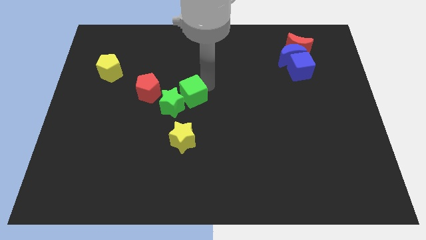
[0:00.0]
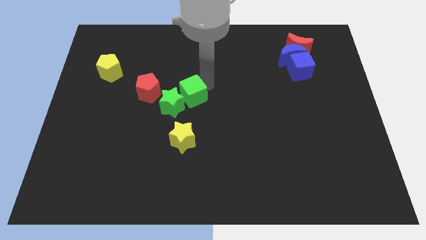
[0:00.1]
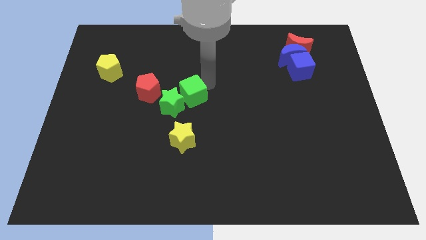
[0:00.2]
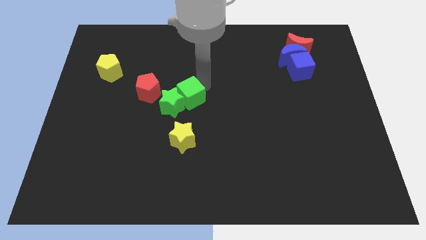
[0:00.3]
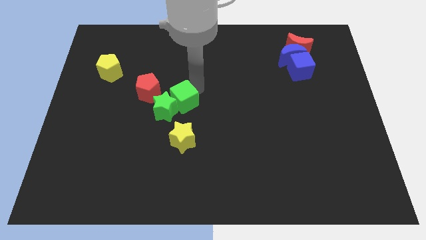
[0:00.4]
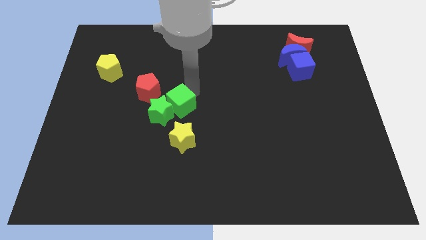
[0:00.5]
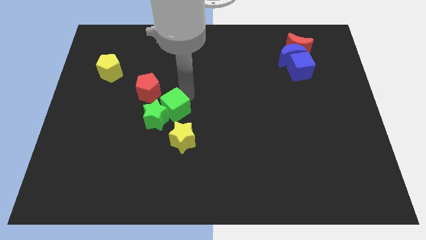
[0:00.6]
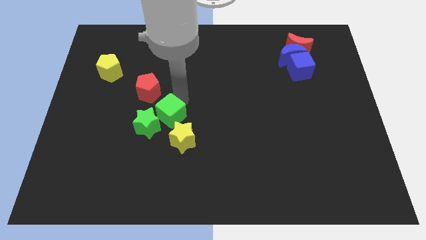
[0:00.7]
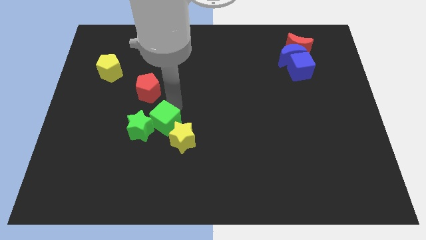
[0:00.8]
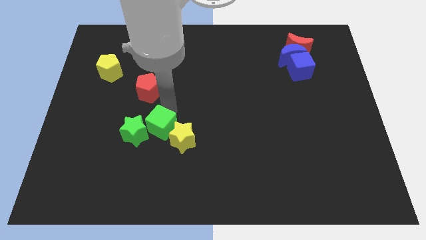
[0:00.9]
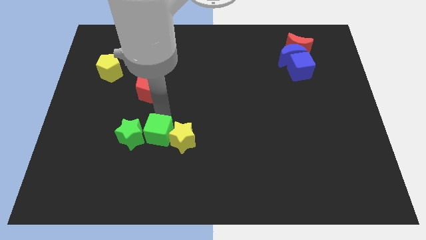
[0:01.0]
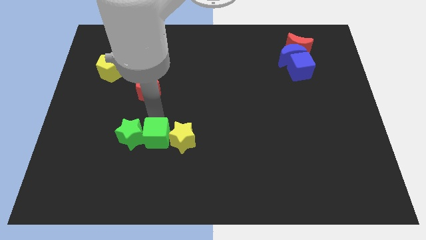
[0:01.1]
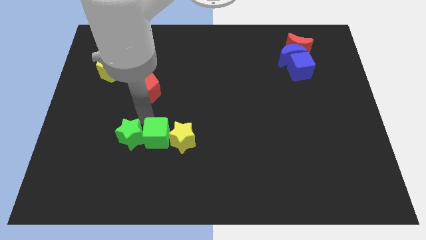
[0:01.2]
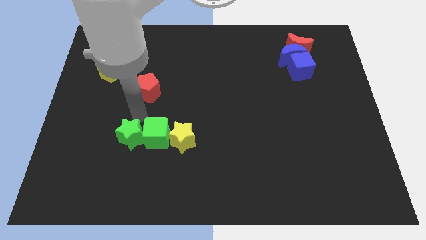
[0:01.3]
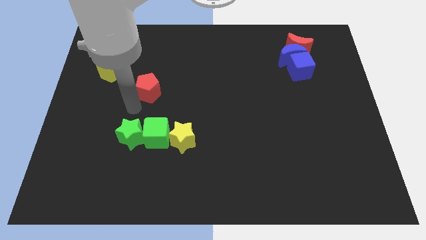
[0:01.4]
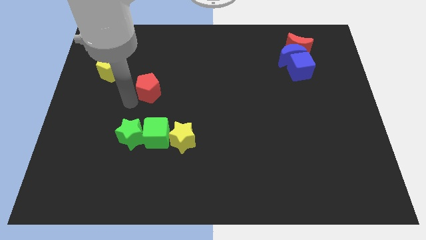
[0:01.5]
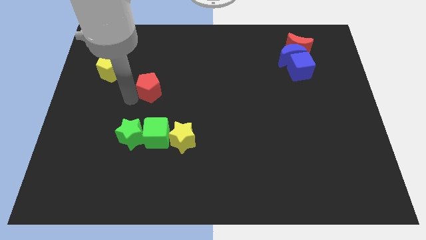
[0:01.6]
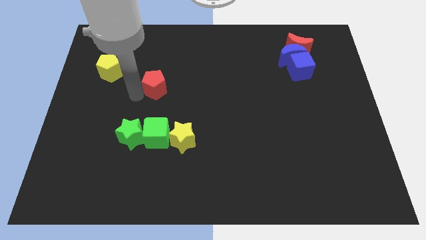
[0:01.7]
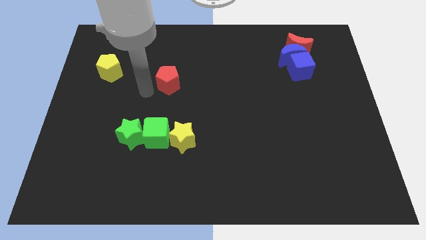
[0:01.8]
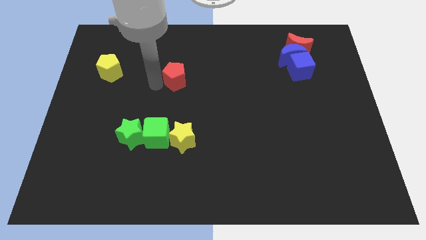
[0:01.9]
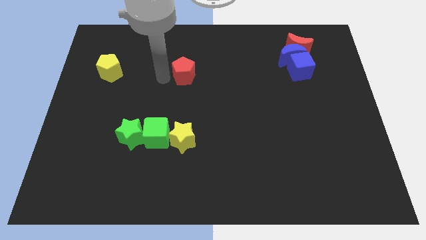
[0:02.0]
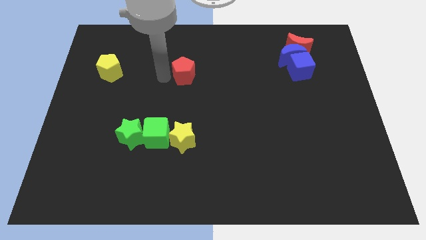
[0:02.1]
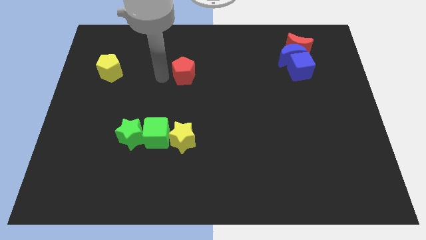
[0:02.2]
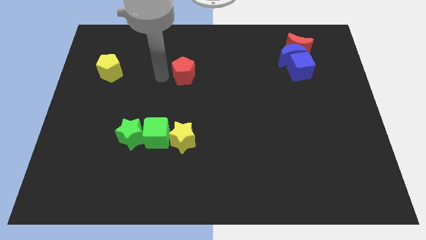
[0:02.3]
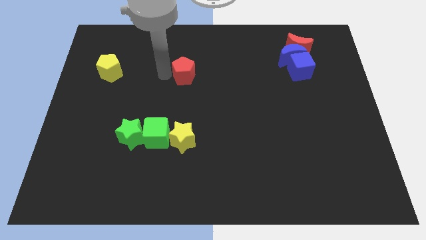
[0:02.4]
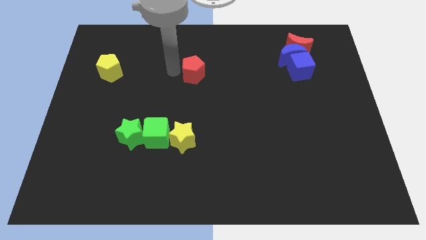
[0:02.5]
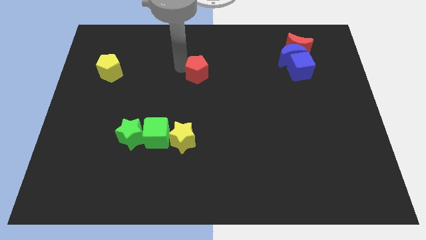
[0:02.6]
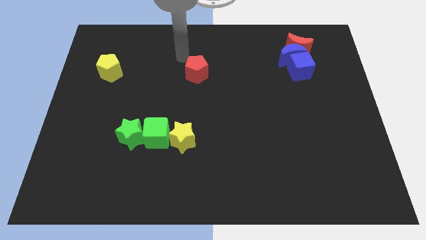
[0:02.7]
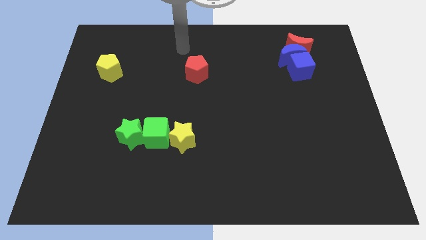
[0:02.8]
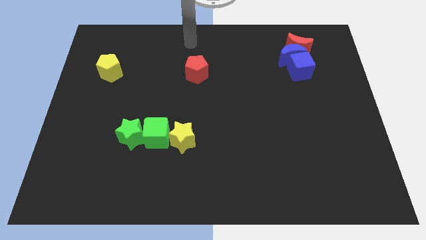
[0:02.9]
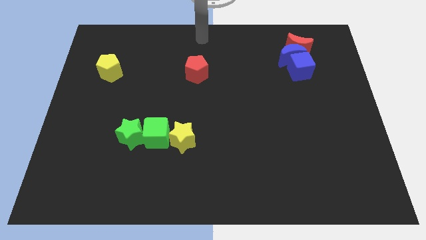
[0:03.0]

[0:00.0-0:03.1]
place the green blocks to the left of the yellow star

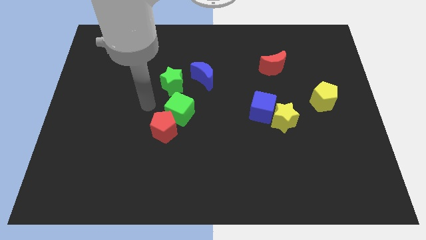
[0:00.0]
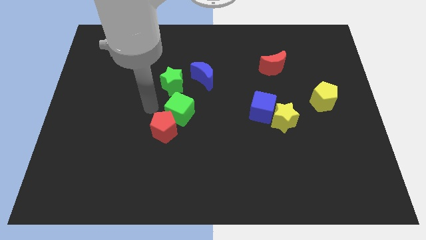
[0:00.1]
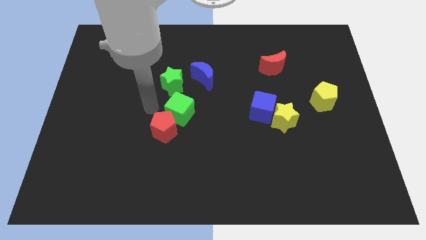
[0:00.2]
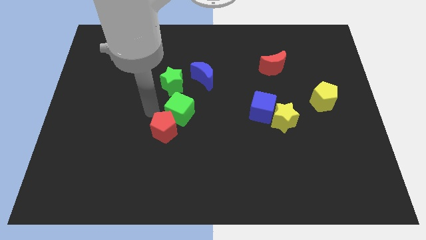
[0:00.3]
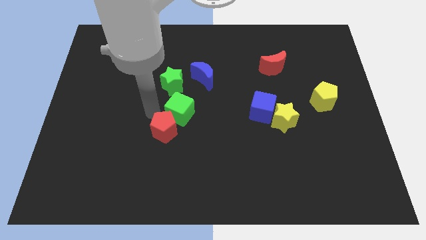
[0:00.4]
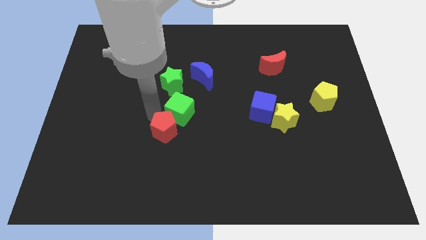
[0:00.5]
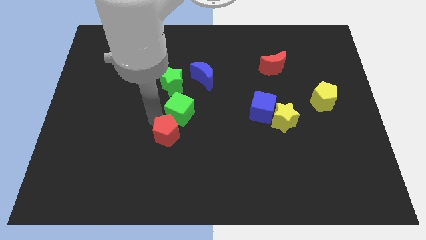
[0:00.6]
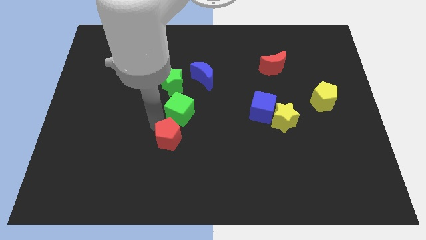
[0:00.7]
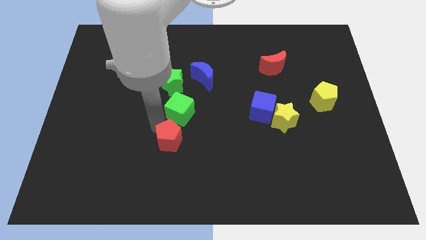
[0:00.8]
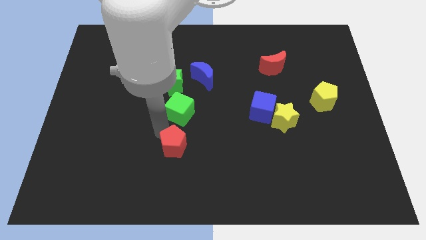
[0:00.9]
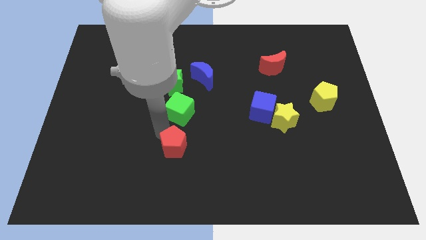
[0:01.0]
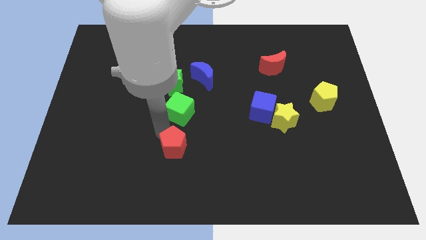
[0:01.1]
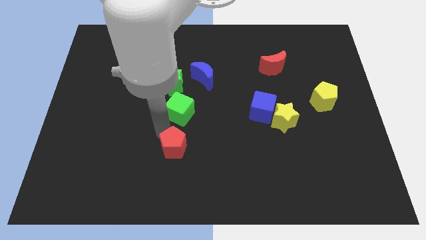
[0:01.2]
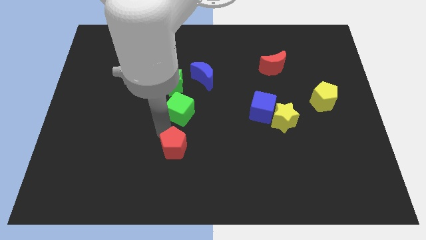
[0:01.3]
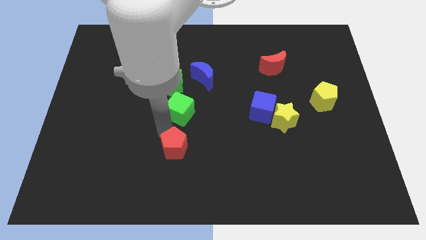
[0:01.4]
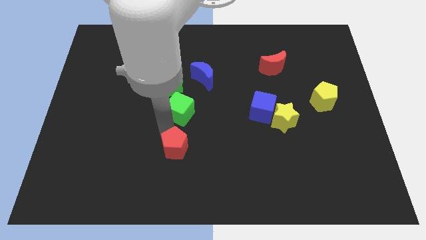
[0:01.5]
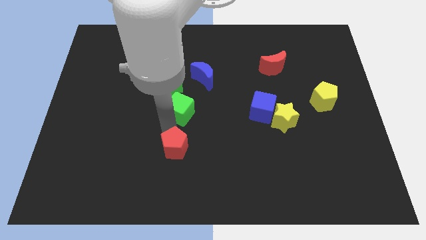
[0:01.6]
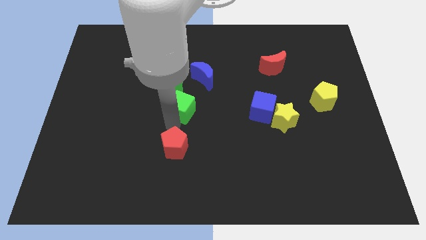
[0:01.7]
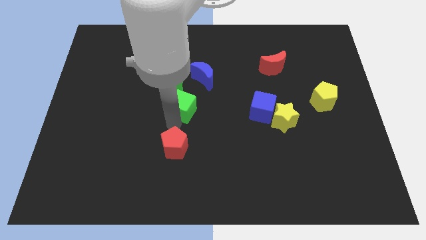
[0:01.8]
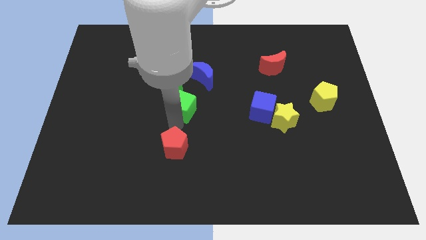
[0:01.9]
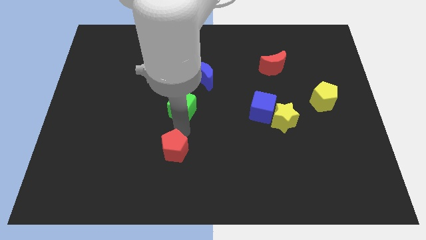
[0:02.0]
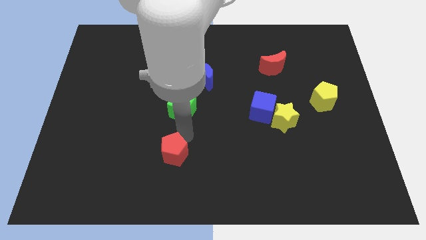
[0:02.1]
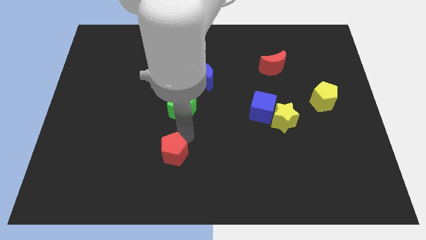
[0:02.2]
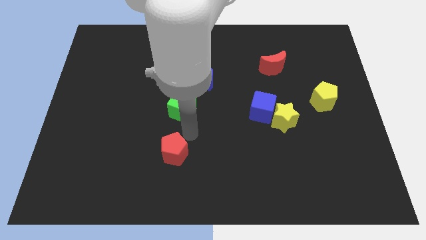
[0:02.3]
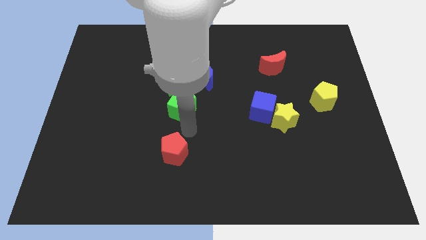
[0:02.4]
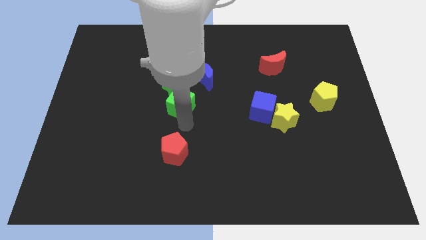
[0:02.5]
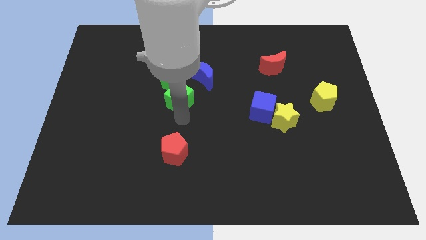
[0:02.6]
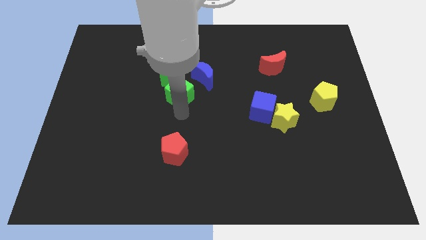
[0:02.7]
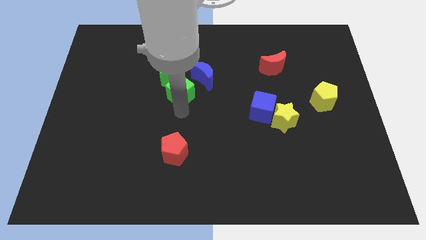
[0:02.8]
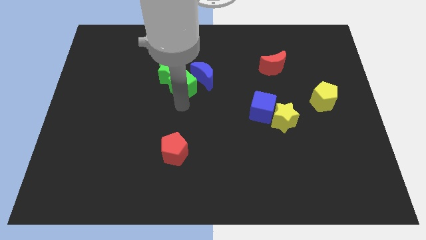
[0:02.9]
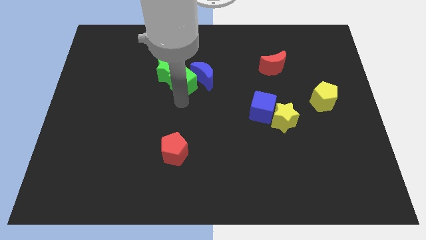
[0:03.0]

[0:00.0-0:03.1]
push green cube beside blue crescent

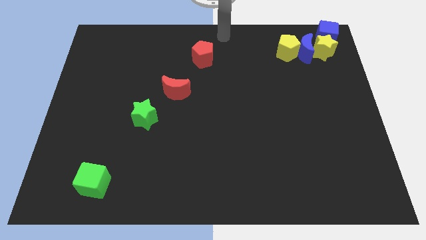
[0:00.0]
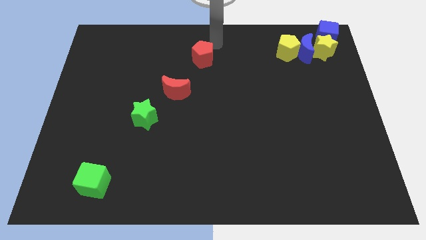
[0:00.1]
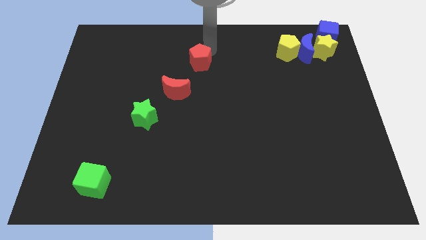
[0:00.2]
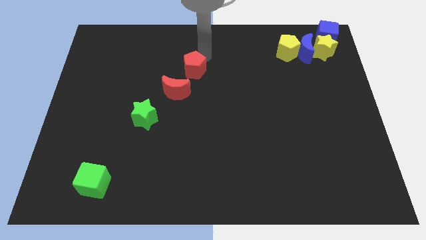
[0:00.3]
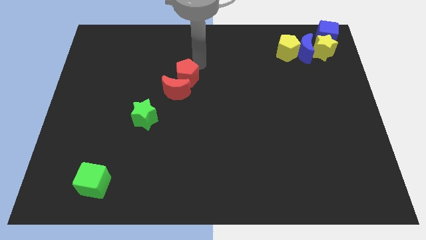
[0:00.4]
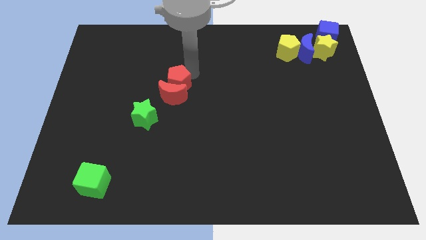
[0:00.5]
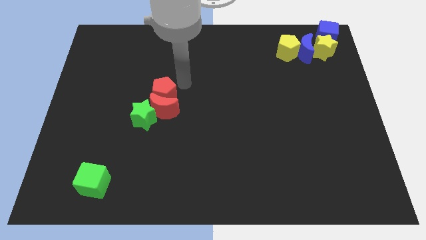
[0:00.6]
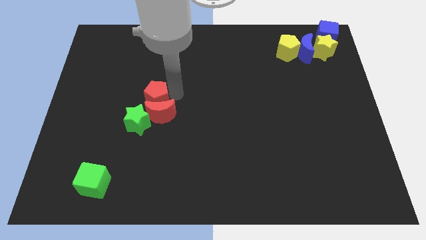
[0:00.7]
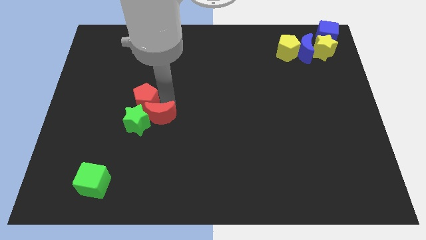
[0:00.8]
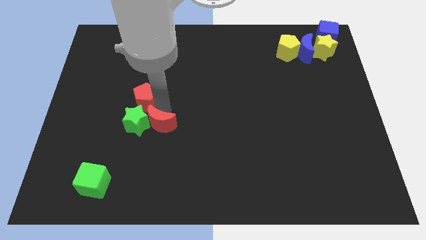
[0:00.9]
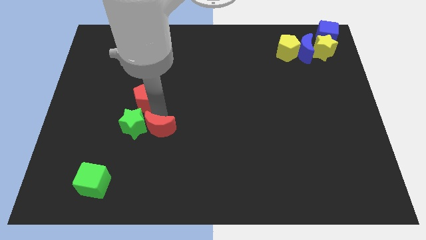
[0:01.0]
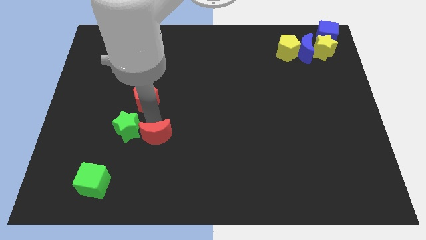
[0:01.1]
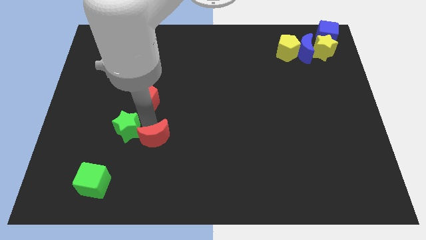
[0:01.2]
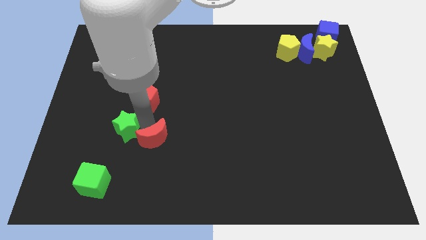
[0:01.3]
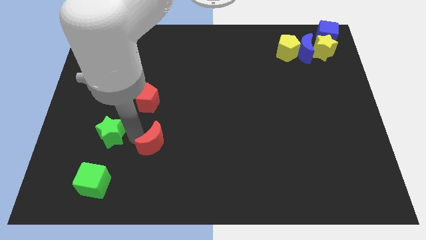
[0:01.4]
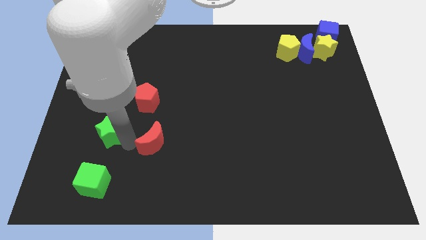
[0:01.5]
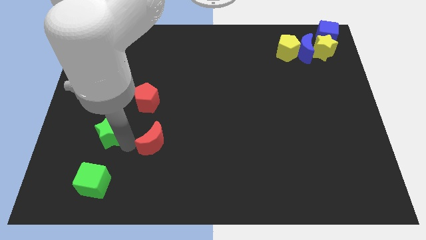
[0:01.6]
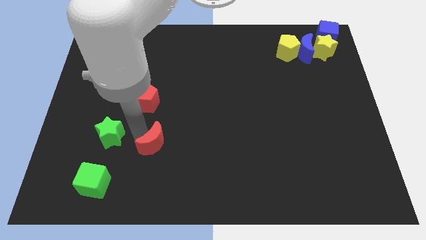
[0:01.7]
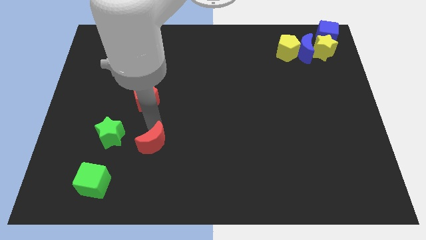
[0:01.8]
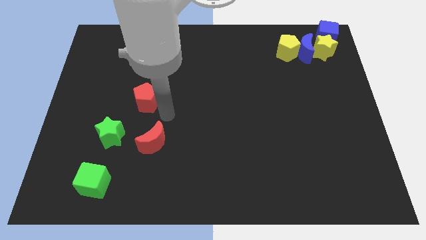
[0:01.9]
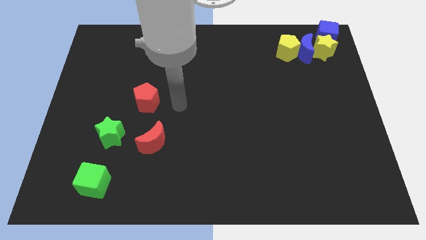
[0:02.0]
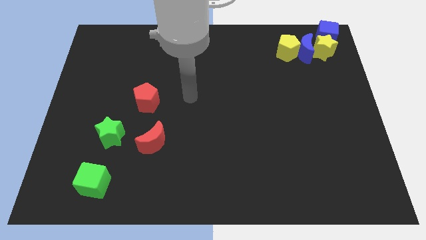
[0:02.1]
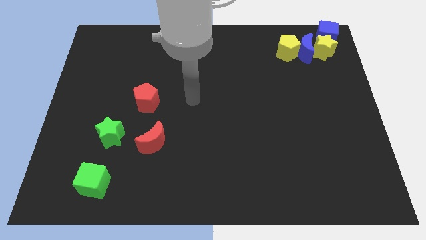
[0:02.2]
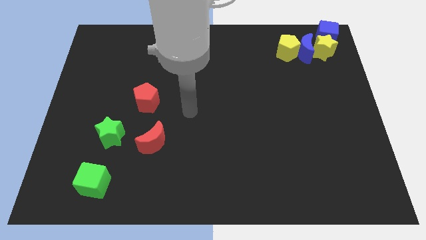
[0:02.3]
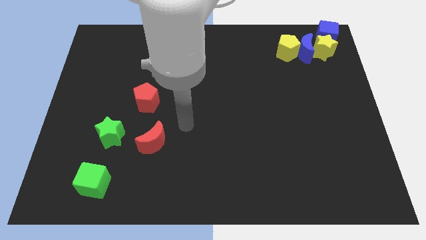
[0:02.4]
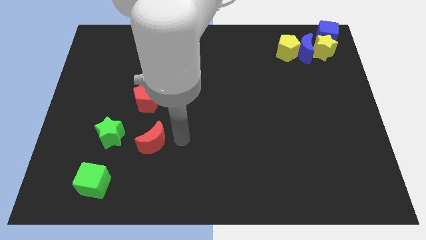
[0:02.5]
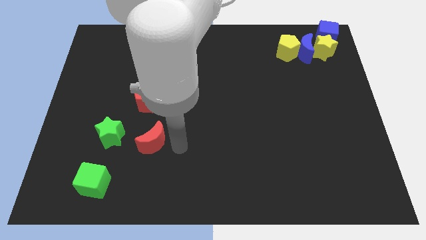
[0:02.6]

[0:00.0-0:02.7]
move the red crescent to the right of the green star

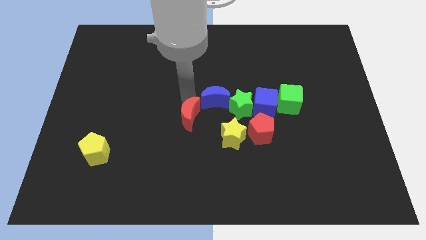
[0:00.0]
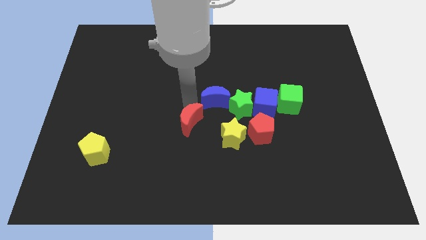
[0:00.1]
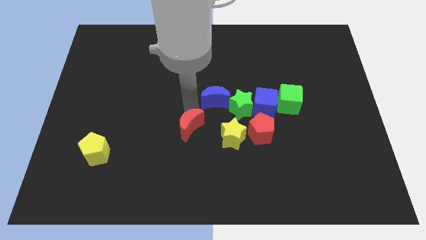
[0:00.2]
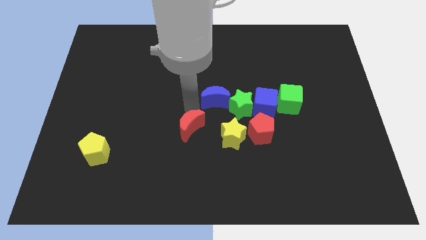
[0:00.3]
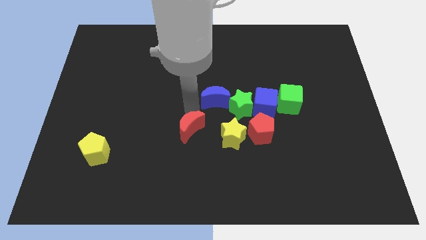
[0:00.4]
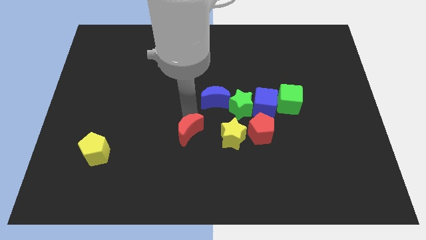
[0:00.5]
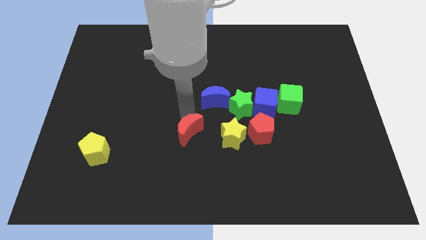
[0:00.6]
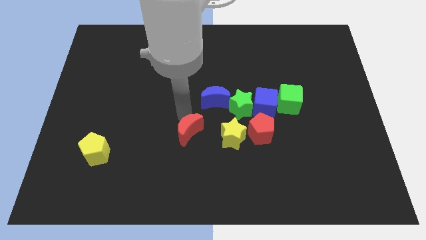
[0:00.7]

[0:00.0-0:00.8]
separate red moon from blue moon
